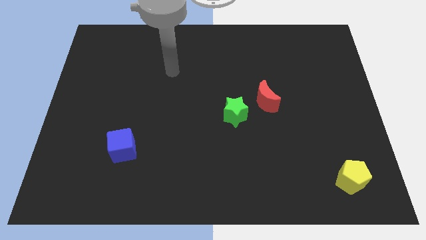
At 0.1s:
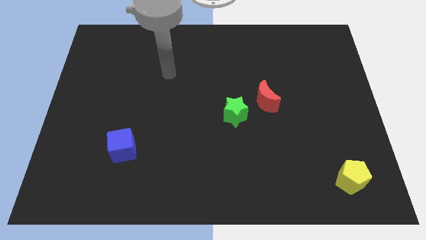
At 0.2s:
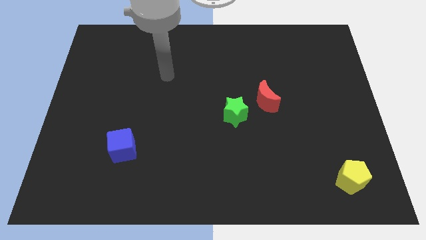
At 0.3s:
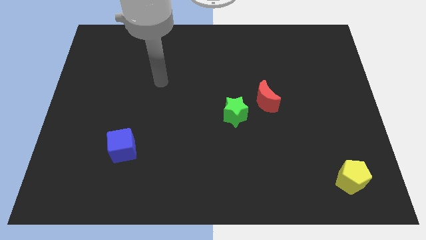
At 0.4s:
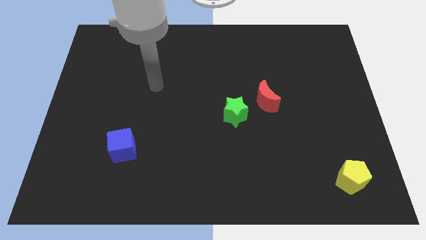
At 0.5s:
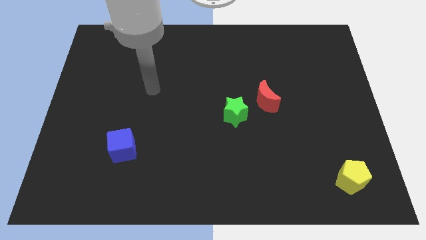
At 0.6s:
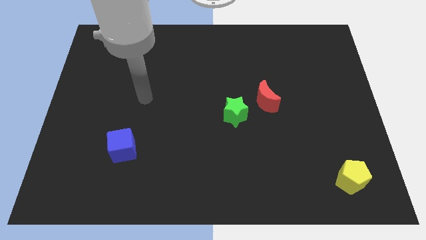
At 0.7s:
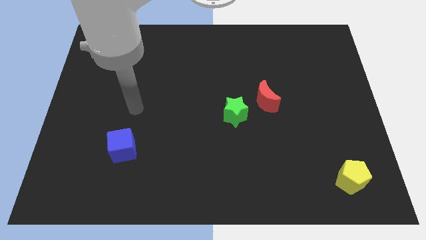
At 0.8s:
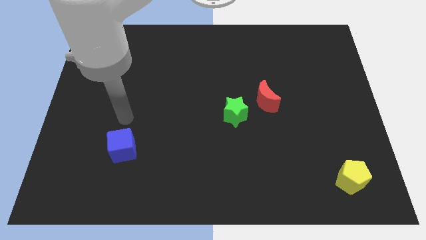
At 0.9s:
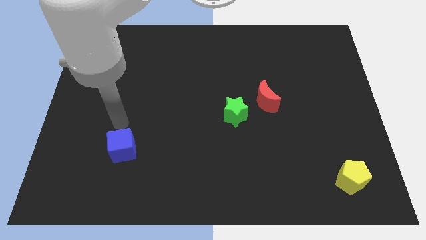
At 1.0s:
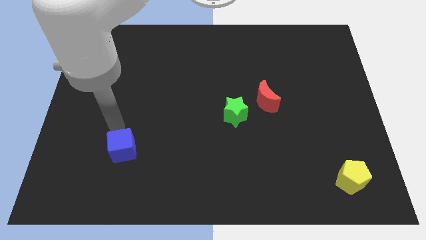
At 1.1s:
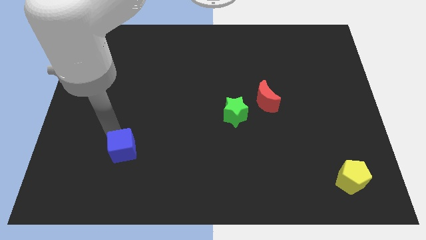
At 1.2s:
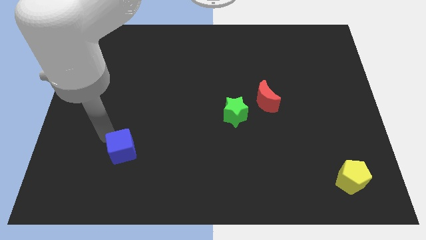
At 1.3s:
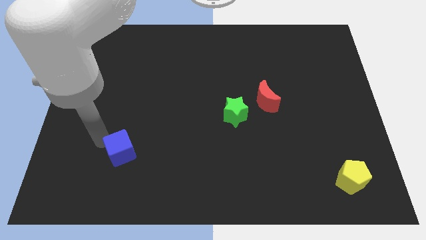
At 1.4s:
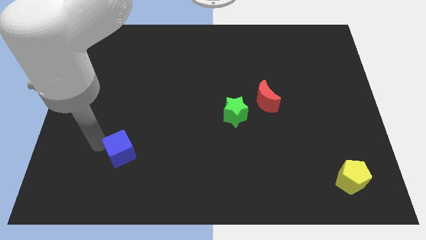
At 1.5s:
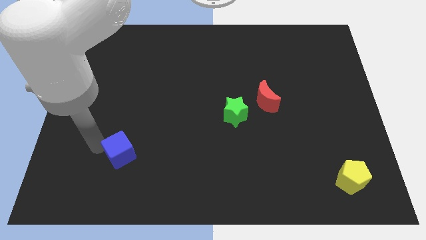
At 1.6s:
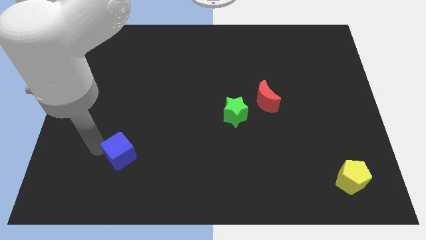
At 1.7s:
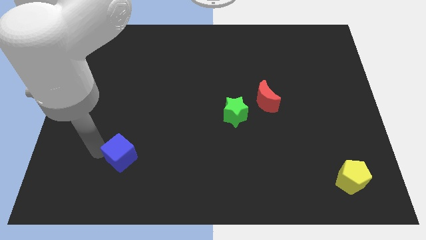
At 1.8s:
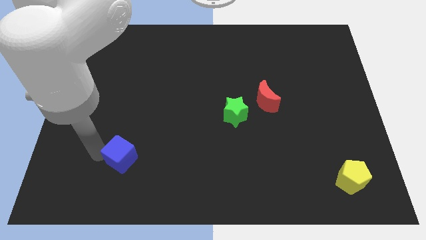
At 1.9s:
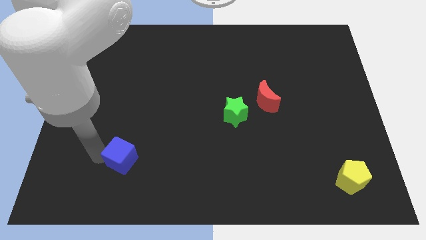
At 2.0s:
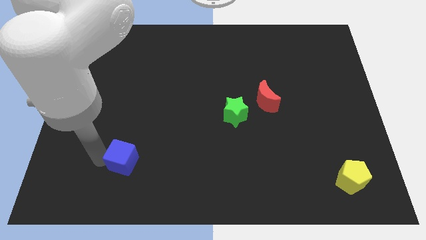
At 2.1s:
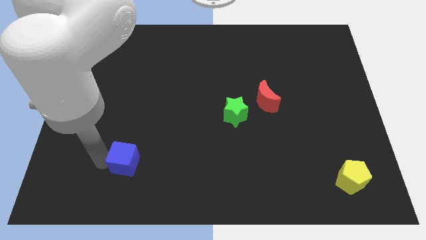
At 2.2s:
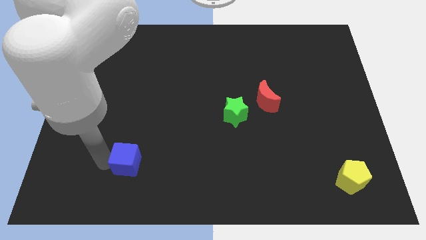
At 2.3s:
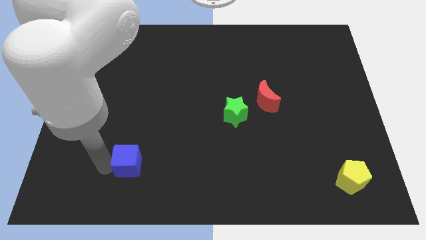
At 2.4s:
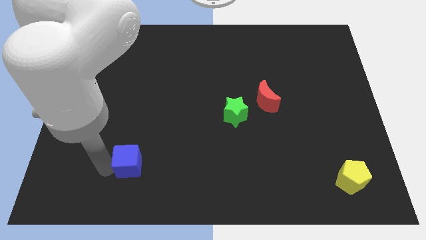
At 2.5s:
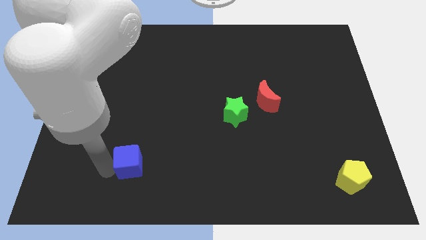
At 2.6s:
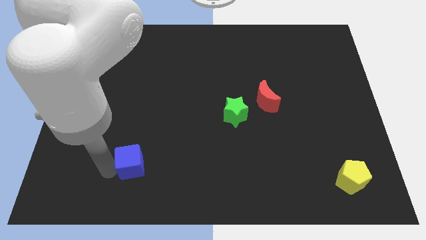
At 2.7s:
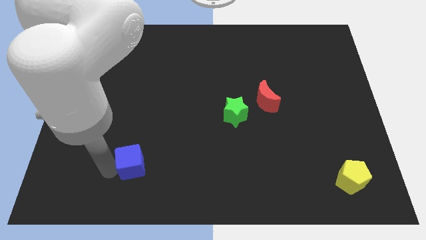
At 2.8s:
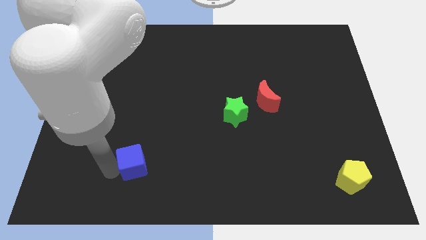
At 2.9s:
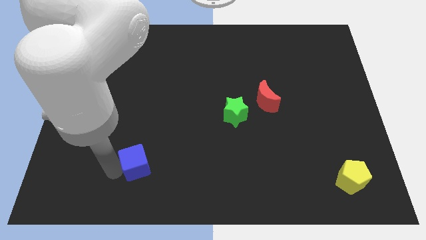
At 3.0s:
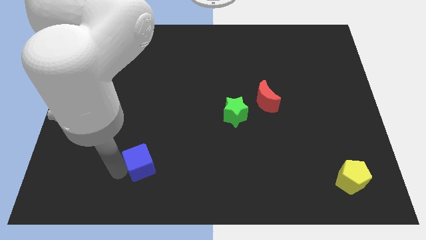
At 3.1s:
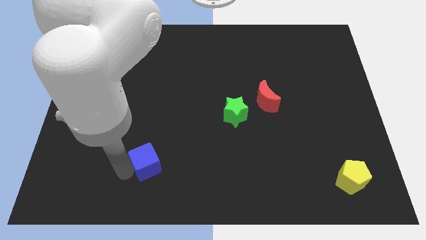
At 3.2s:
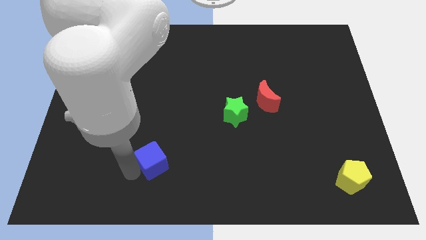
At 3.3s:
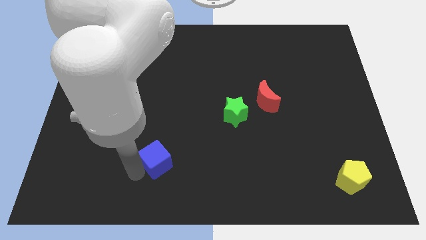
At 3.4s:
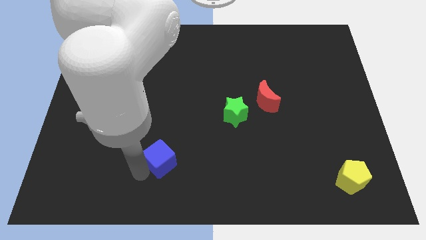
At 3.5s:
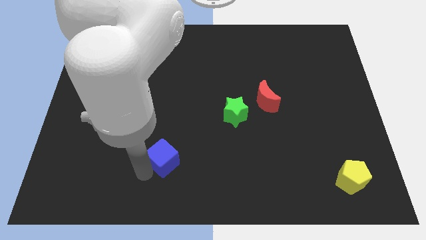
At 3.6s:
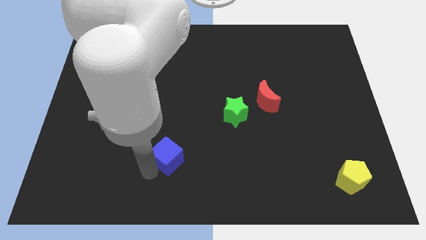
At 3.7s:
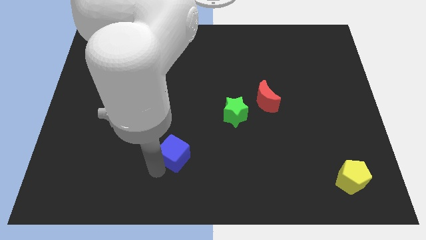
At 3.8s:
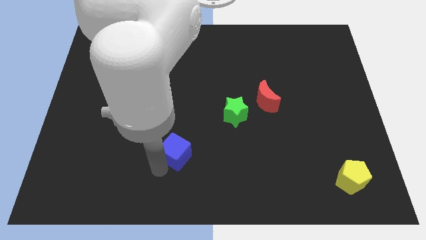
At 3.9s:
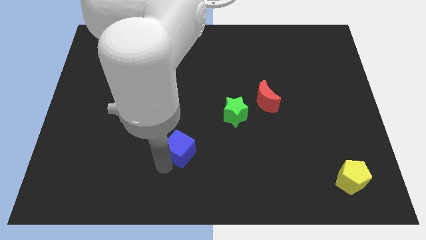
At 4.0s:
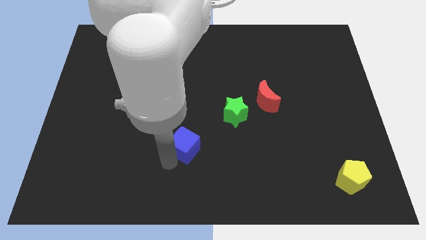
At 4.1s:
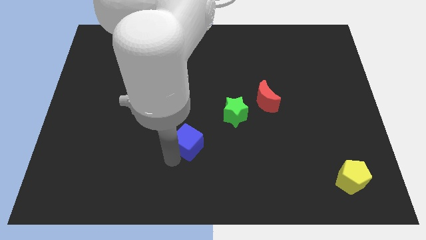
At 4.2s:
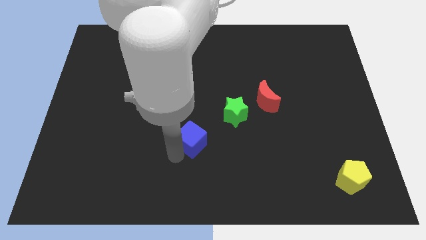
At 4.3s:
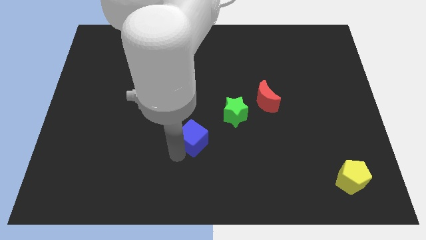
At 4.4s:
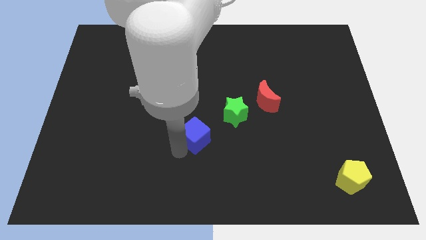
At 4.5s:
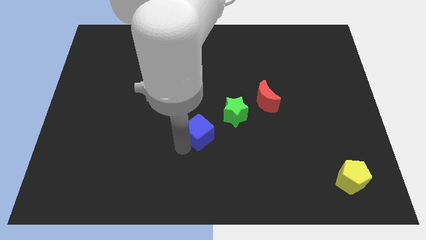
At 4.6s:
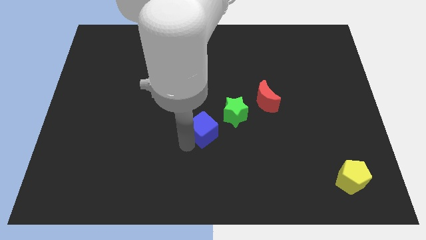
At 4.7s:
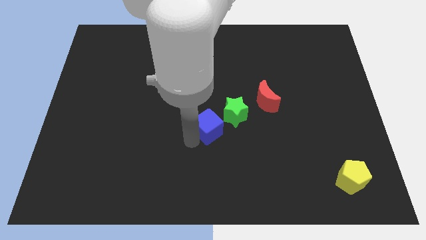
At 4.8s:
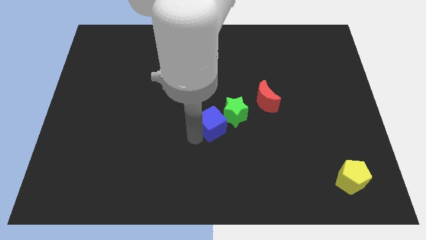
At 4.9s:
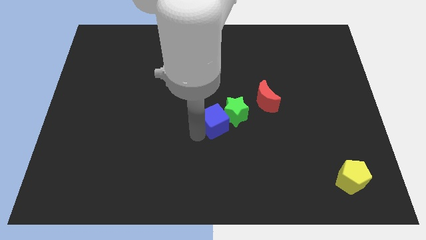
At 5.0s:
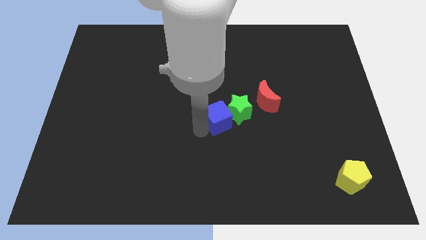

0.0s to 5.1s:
move the blue cube to the green block

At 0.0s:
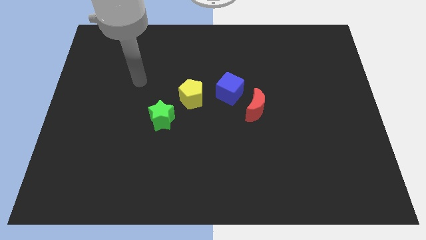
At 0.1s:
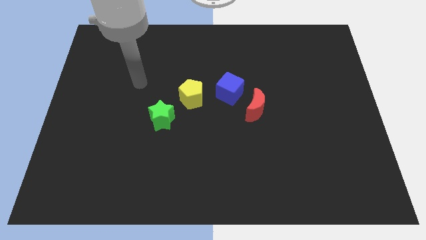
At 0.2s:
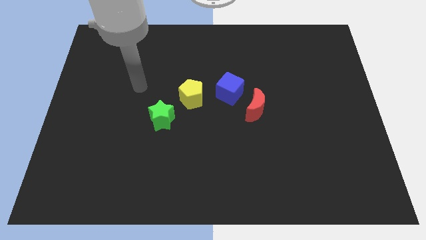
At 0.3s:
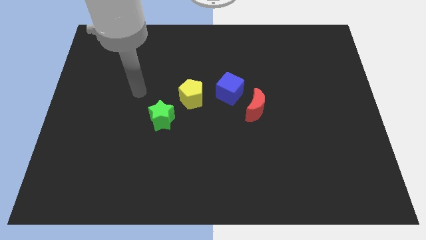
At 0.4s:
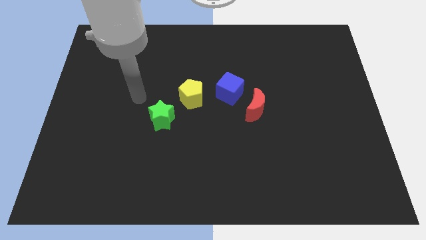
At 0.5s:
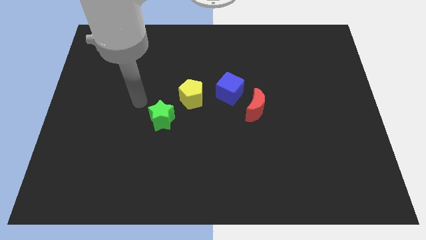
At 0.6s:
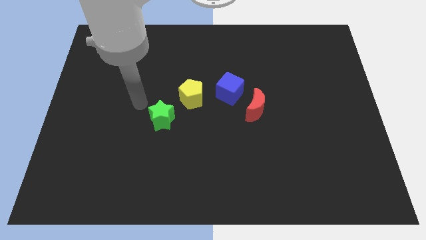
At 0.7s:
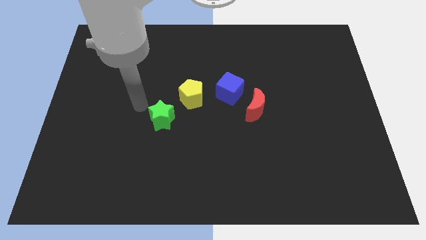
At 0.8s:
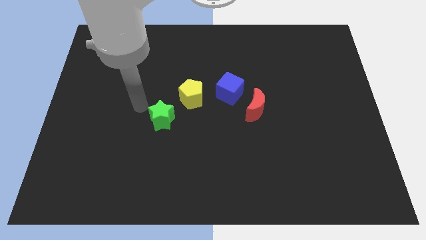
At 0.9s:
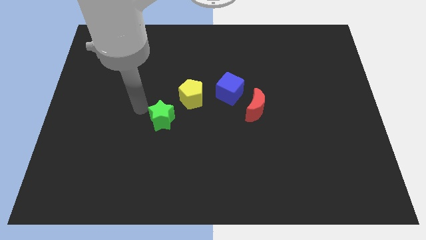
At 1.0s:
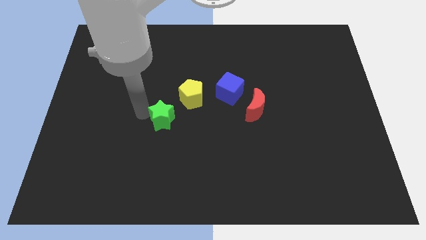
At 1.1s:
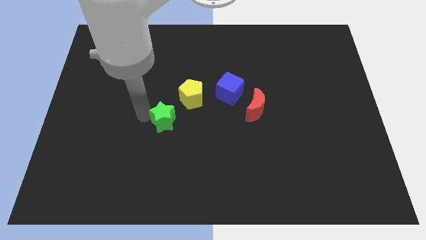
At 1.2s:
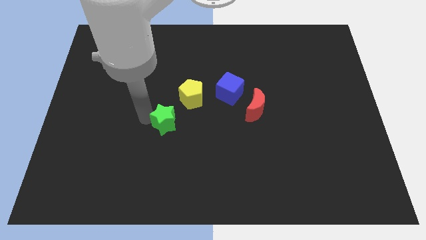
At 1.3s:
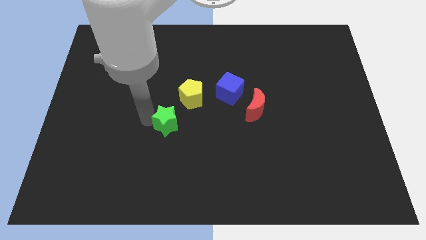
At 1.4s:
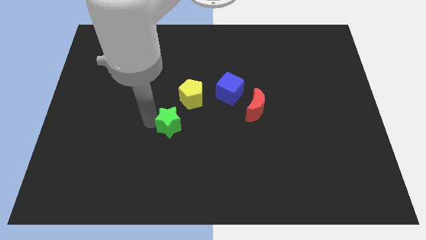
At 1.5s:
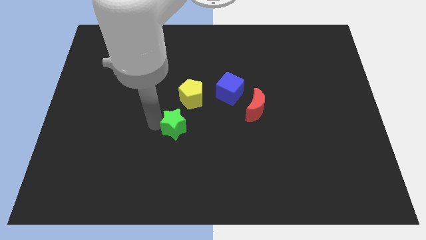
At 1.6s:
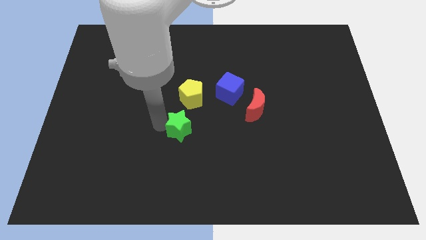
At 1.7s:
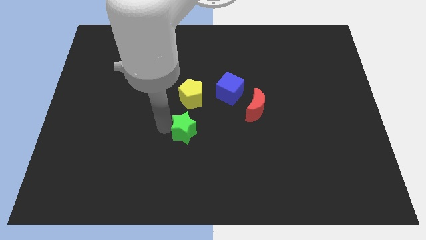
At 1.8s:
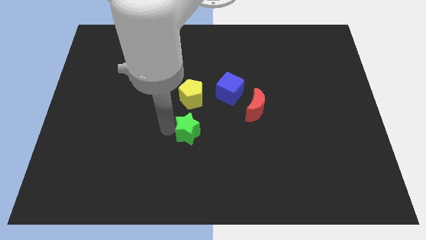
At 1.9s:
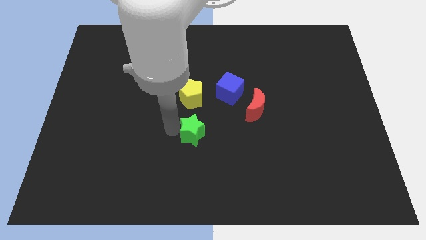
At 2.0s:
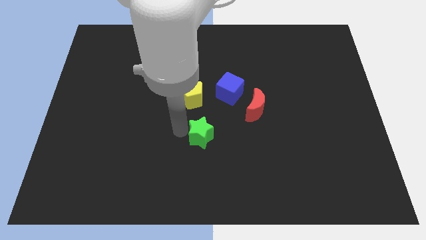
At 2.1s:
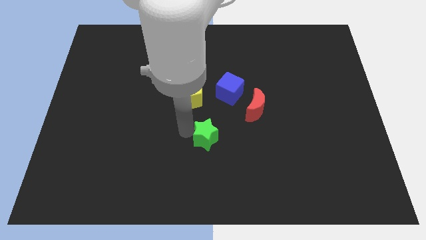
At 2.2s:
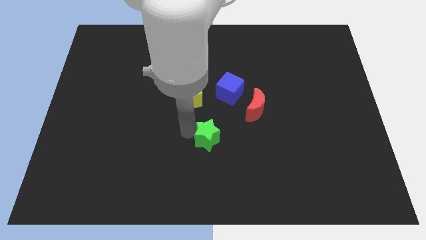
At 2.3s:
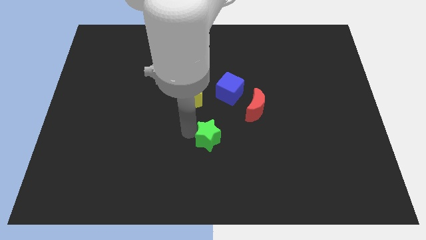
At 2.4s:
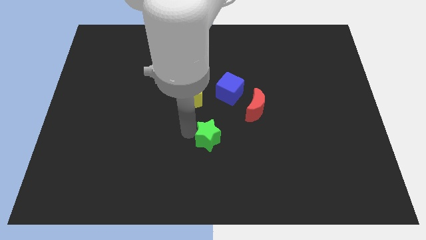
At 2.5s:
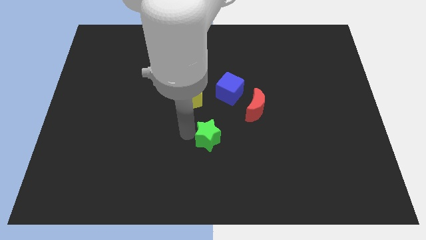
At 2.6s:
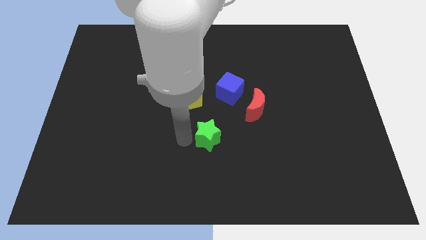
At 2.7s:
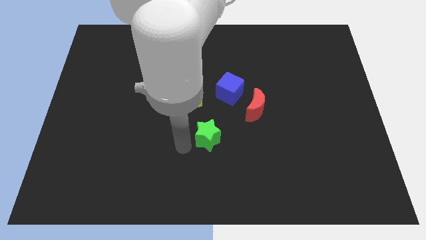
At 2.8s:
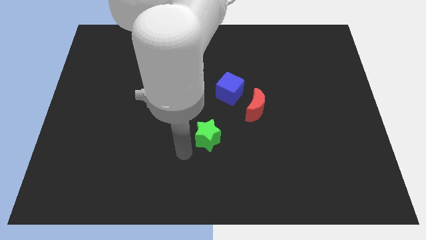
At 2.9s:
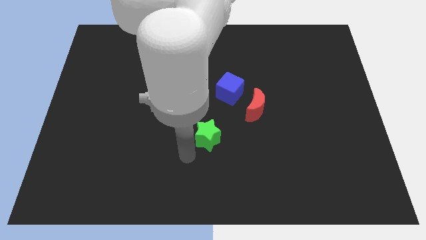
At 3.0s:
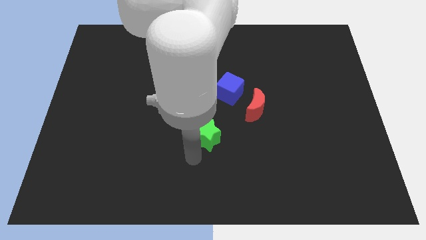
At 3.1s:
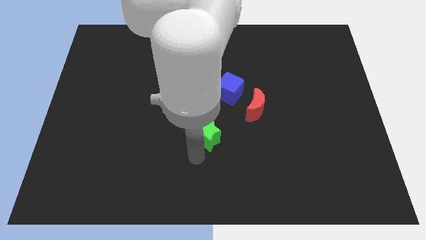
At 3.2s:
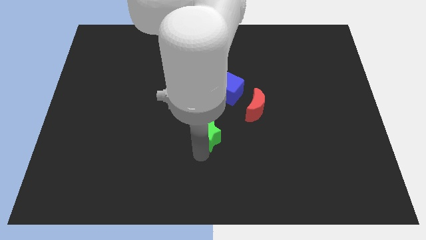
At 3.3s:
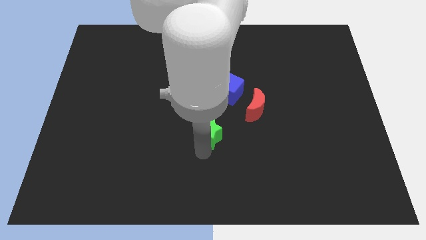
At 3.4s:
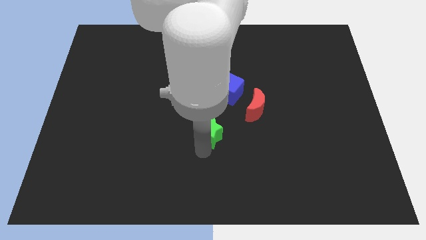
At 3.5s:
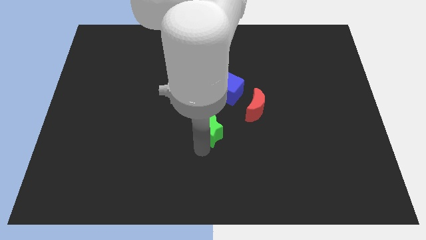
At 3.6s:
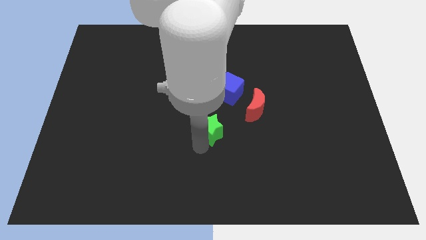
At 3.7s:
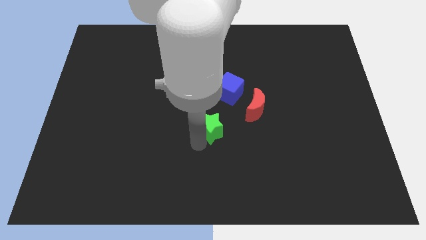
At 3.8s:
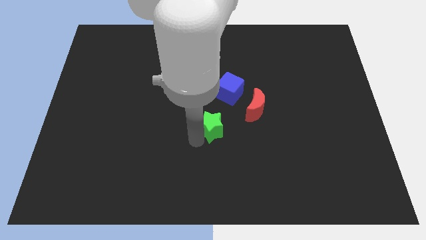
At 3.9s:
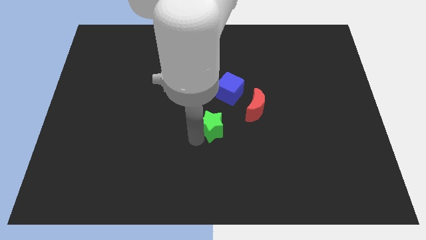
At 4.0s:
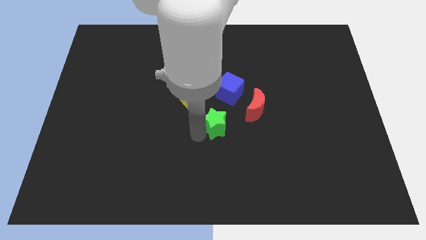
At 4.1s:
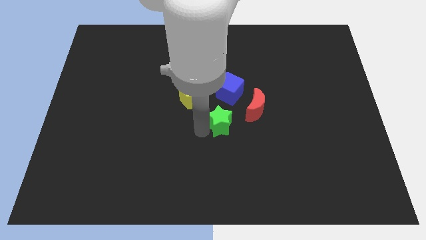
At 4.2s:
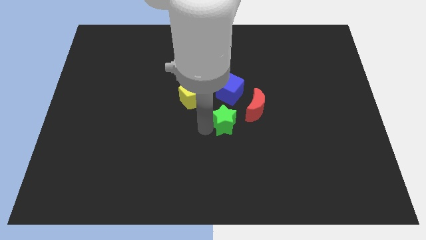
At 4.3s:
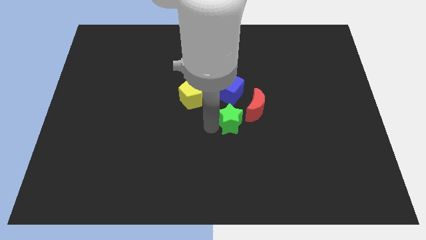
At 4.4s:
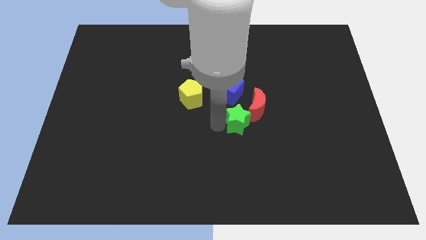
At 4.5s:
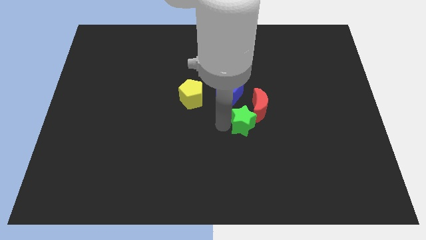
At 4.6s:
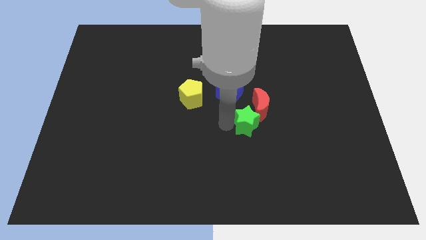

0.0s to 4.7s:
move the star to the red block
